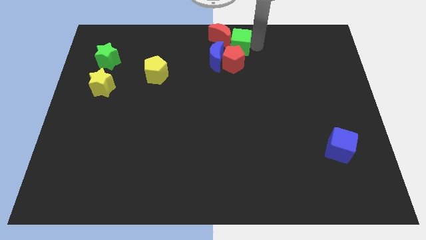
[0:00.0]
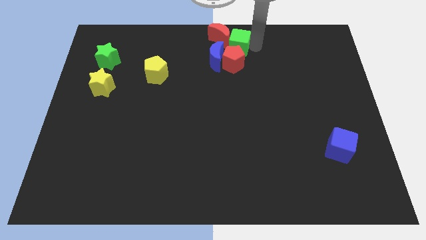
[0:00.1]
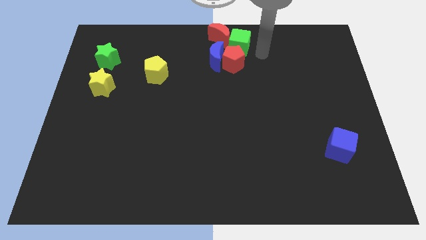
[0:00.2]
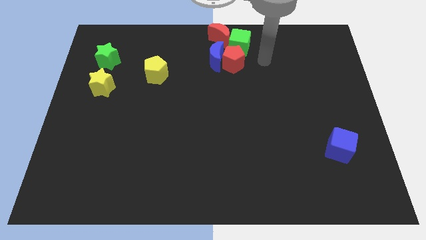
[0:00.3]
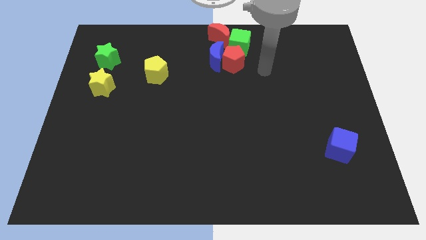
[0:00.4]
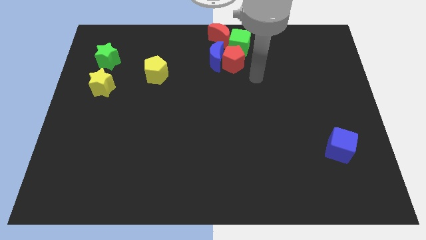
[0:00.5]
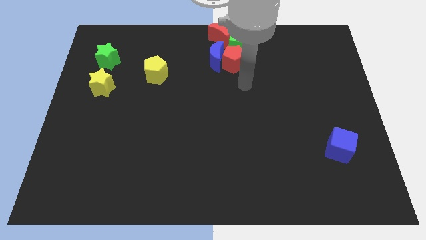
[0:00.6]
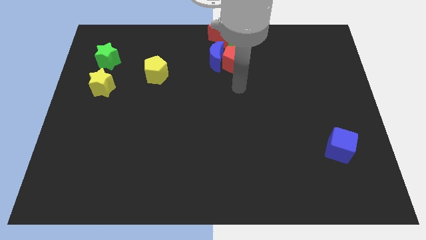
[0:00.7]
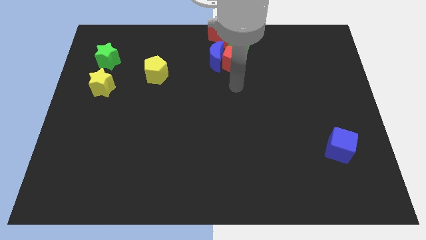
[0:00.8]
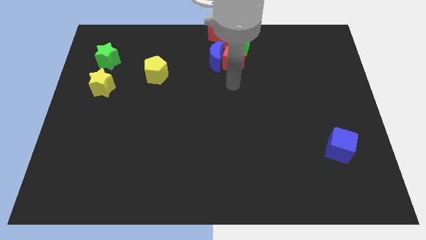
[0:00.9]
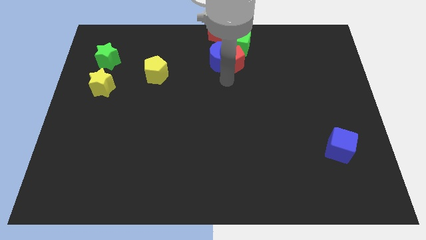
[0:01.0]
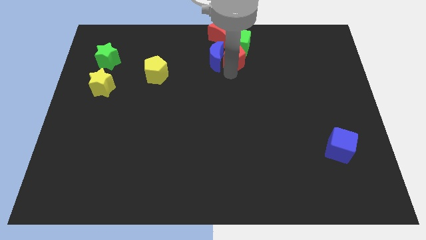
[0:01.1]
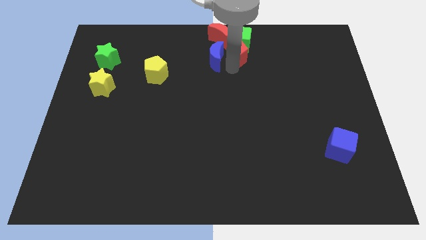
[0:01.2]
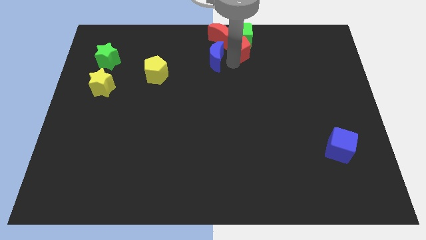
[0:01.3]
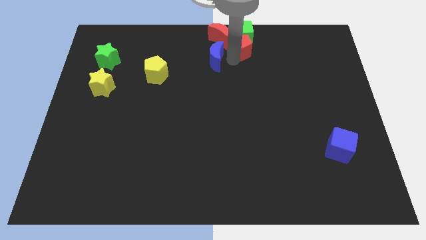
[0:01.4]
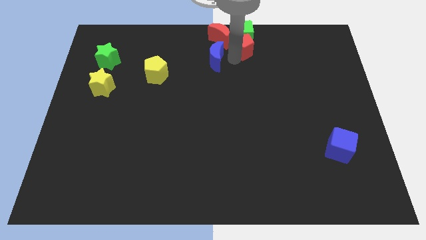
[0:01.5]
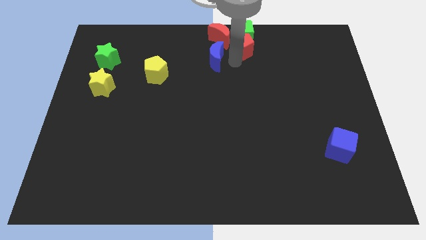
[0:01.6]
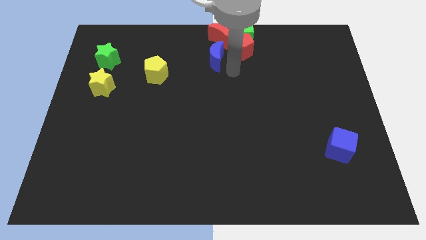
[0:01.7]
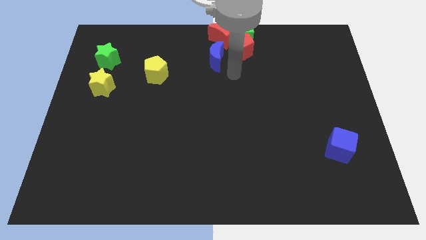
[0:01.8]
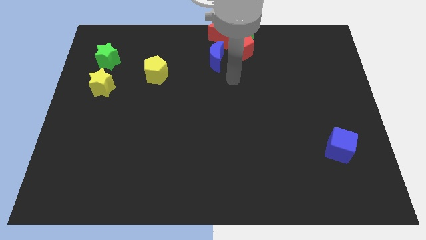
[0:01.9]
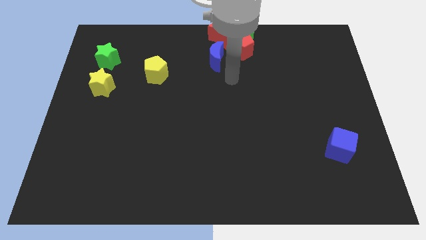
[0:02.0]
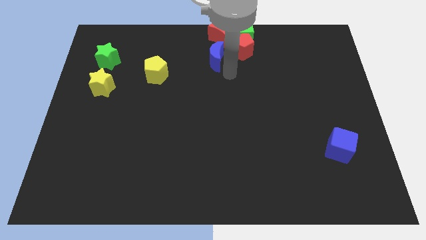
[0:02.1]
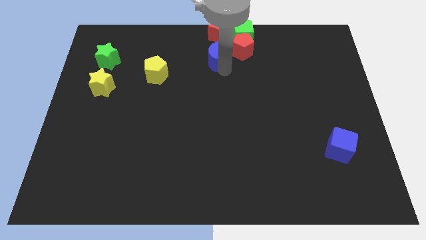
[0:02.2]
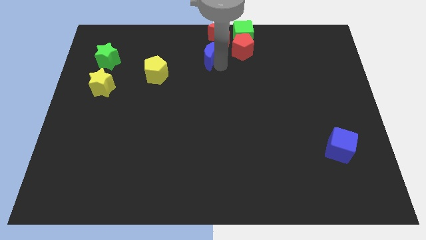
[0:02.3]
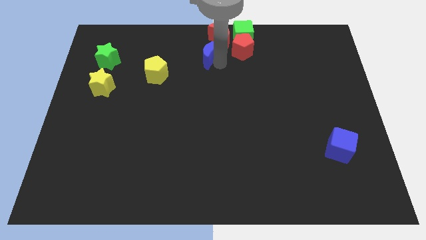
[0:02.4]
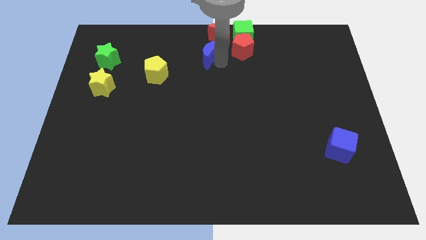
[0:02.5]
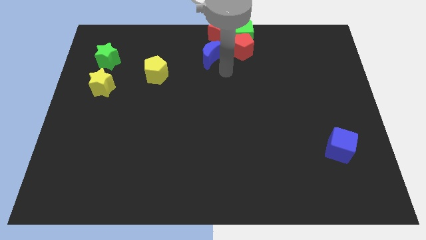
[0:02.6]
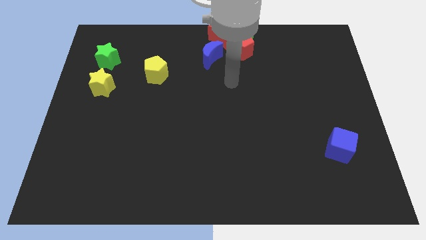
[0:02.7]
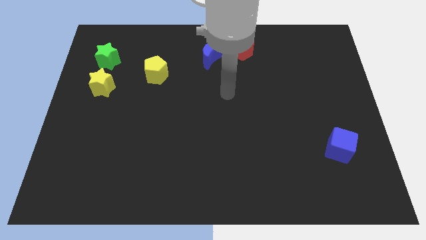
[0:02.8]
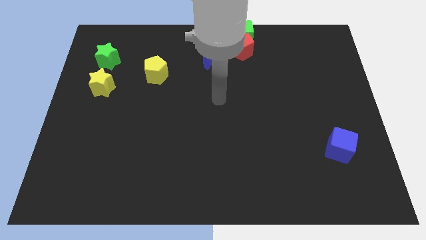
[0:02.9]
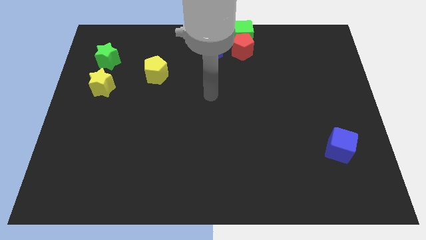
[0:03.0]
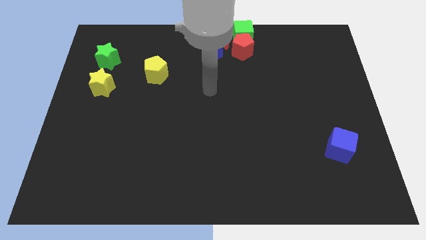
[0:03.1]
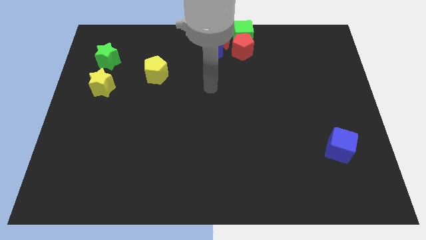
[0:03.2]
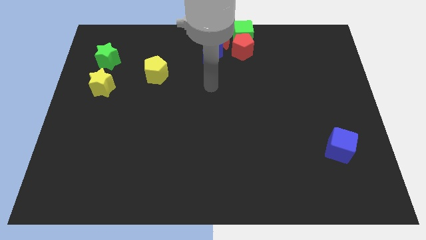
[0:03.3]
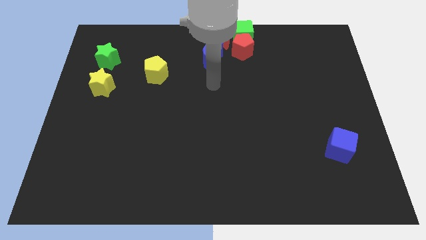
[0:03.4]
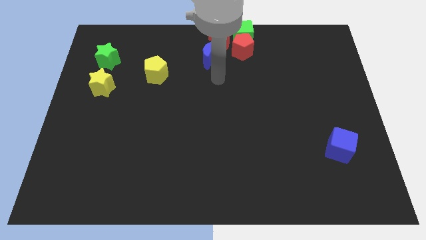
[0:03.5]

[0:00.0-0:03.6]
push the red pentagon into the green cube

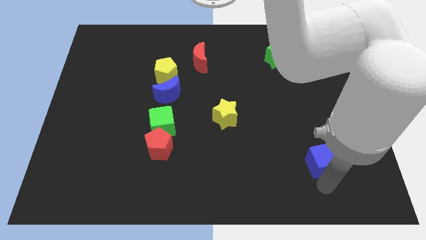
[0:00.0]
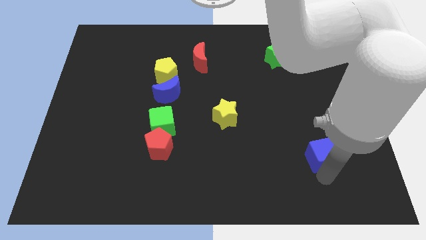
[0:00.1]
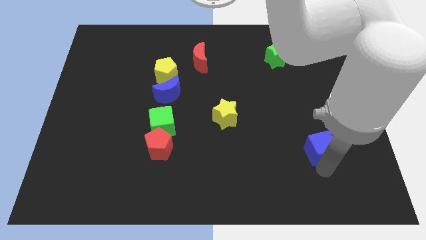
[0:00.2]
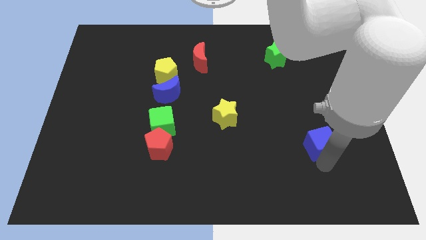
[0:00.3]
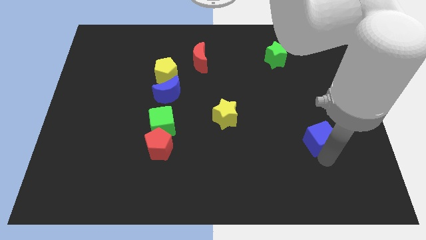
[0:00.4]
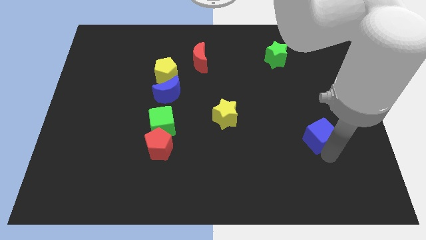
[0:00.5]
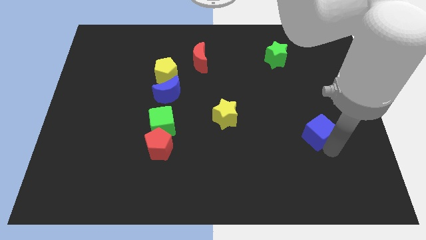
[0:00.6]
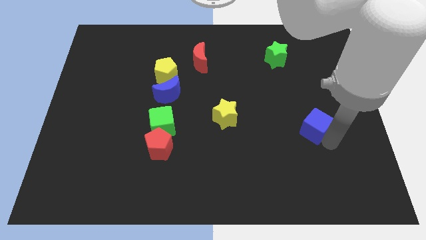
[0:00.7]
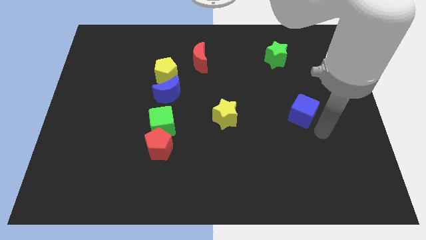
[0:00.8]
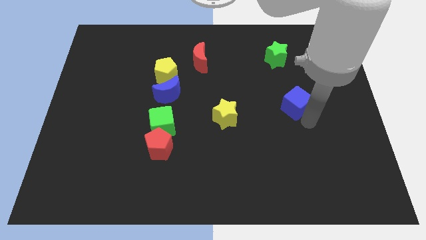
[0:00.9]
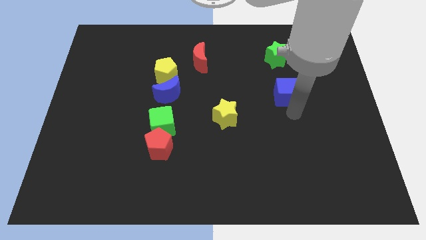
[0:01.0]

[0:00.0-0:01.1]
slide blue cube up parallel right to blue moon

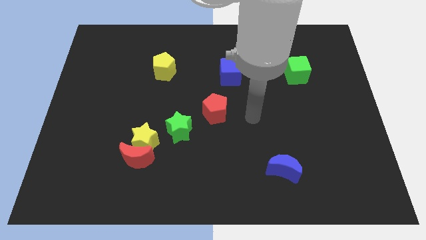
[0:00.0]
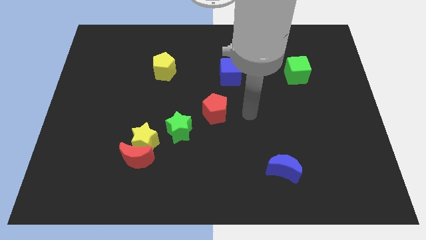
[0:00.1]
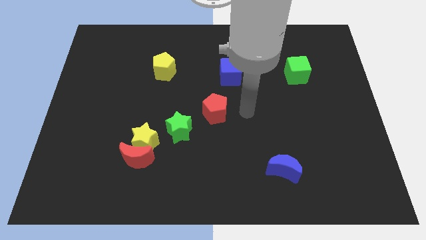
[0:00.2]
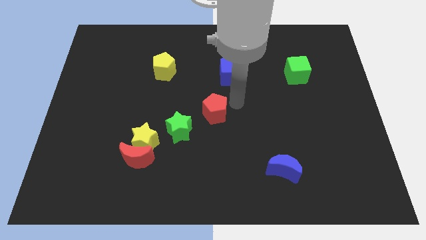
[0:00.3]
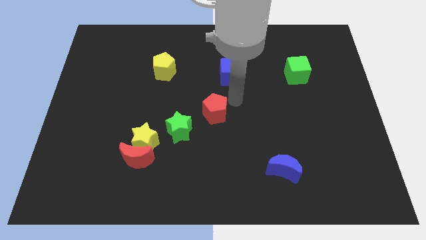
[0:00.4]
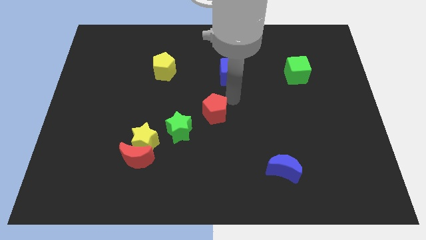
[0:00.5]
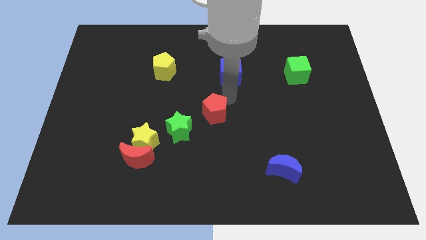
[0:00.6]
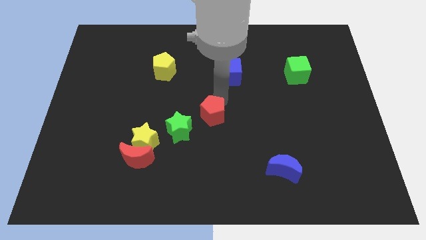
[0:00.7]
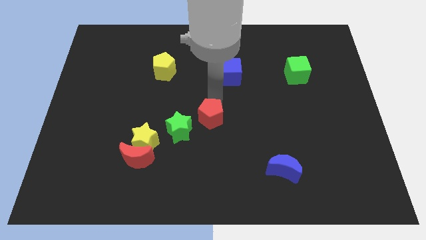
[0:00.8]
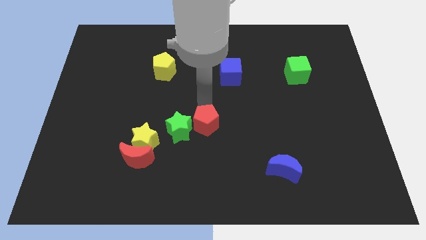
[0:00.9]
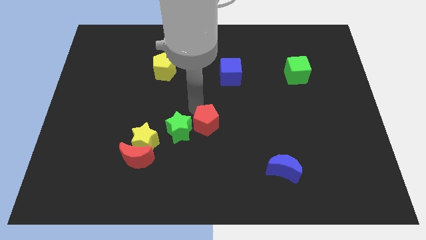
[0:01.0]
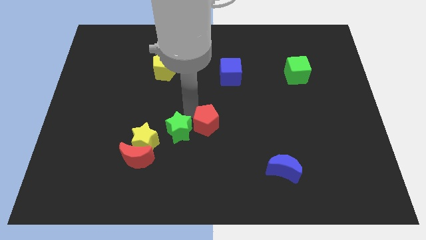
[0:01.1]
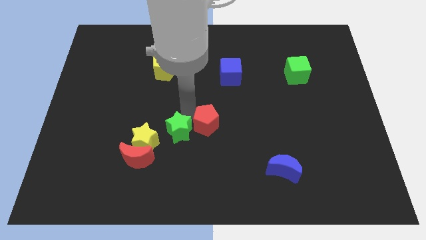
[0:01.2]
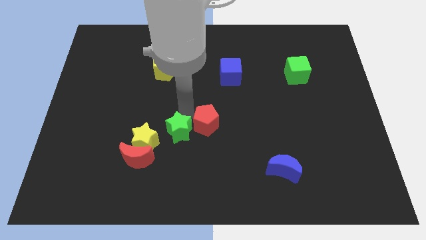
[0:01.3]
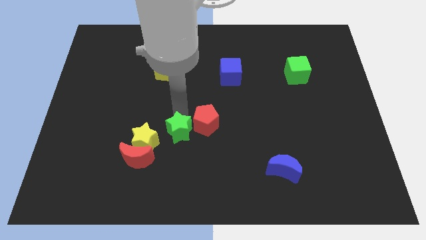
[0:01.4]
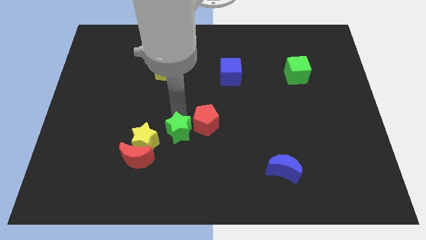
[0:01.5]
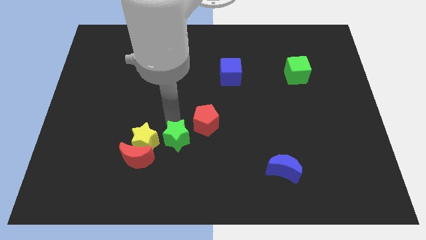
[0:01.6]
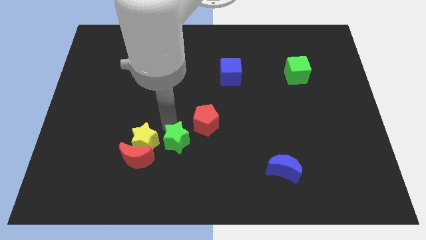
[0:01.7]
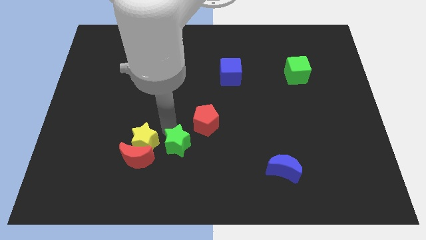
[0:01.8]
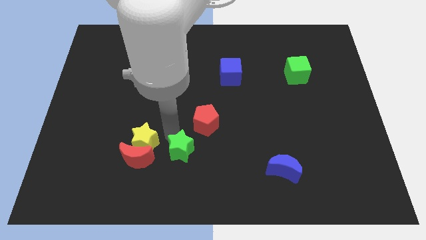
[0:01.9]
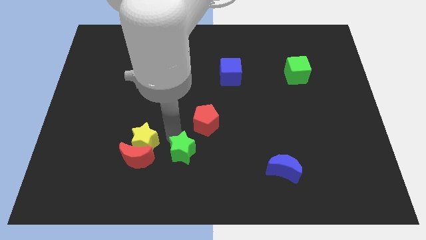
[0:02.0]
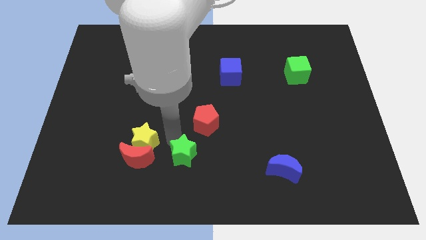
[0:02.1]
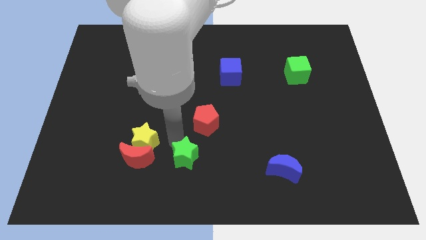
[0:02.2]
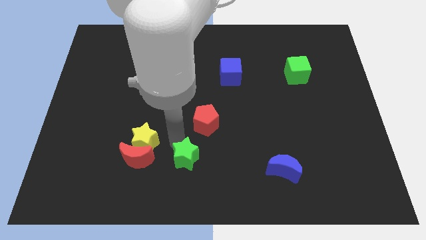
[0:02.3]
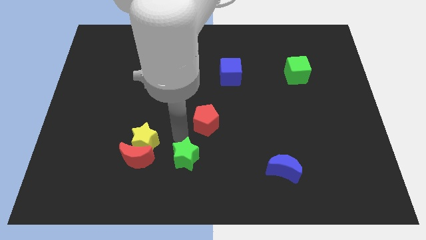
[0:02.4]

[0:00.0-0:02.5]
move the green star right to the red crescent

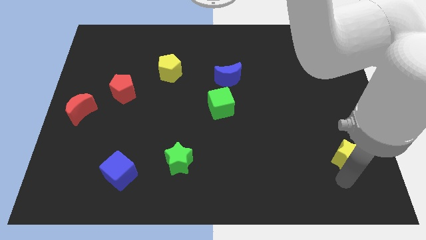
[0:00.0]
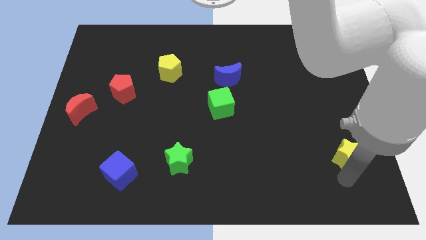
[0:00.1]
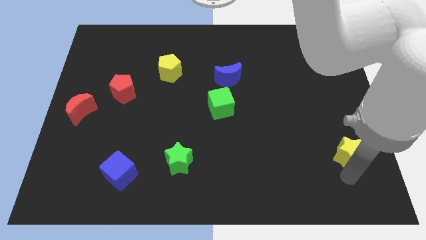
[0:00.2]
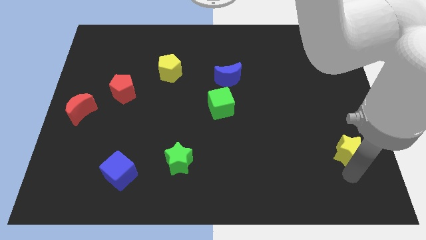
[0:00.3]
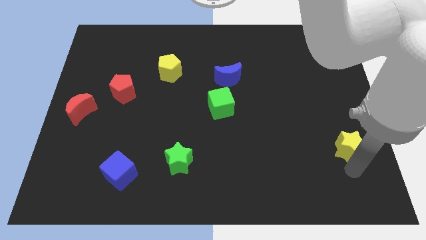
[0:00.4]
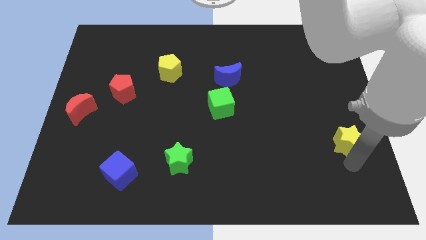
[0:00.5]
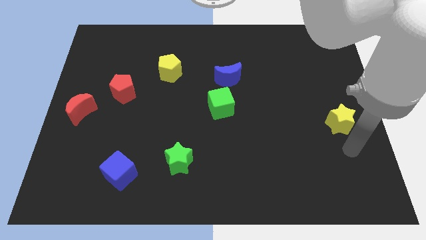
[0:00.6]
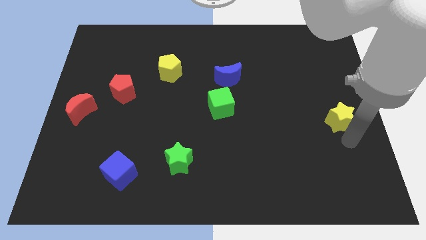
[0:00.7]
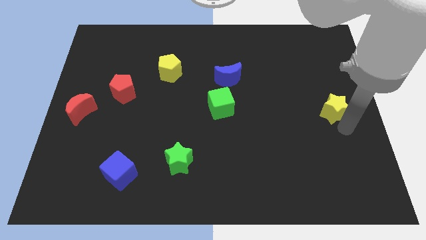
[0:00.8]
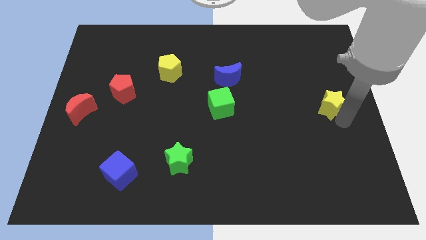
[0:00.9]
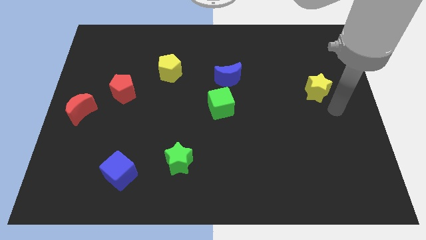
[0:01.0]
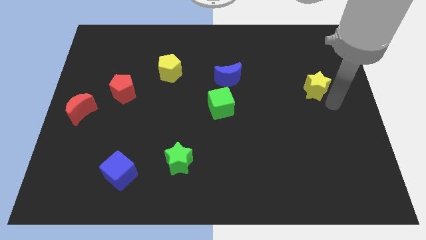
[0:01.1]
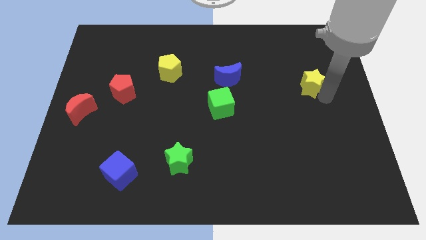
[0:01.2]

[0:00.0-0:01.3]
move the yellow star to the top of the board

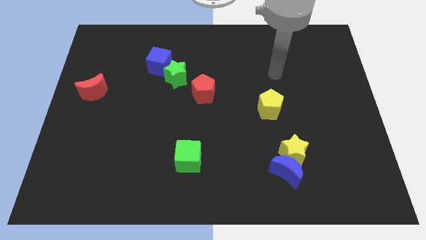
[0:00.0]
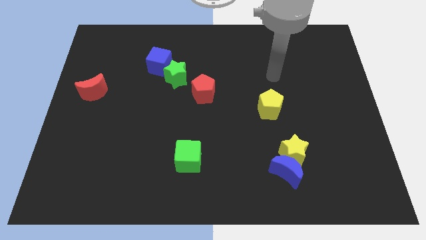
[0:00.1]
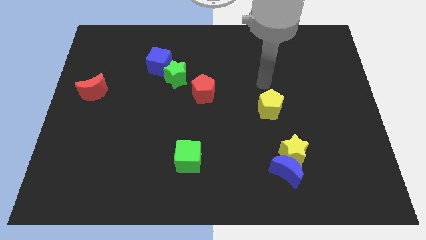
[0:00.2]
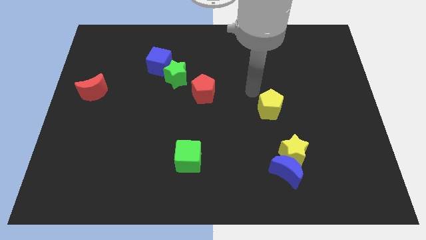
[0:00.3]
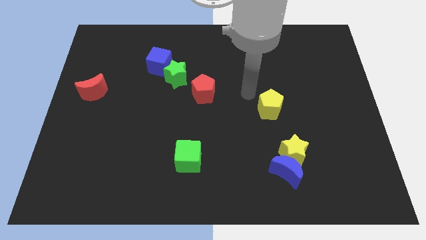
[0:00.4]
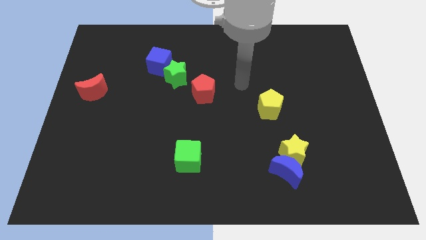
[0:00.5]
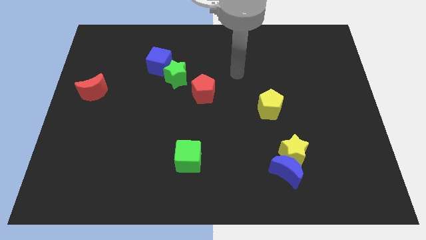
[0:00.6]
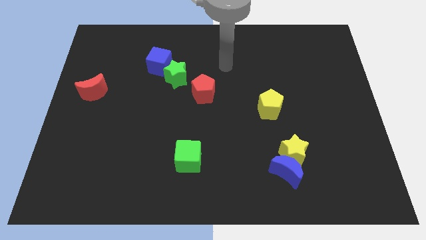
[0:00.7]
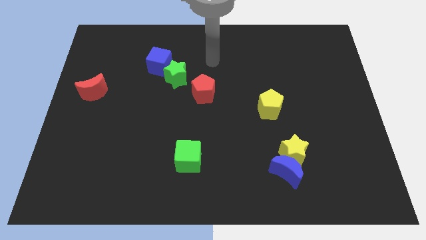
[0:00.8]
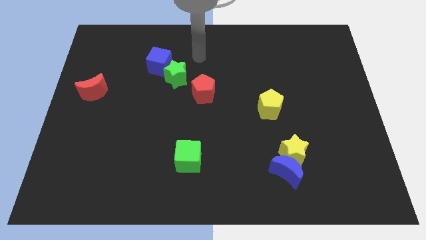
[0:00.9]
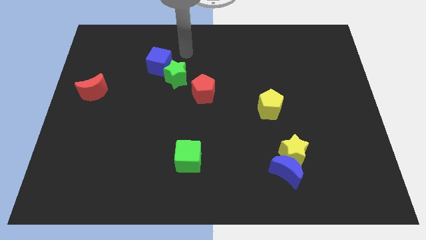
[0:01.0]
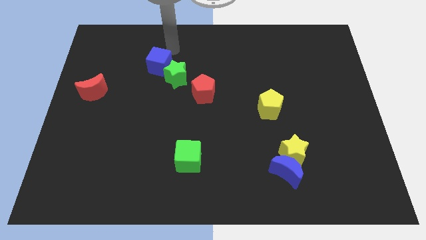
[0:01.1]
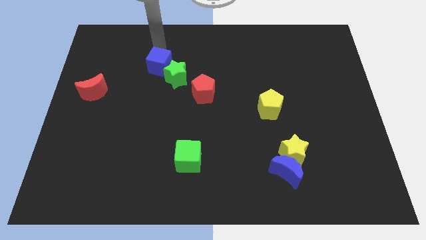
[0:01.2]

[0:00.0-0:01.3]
place your arm to the top of blue cube
